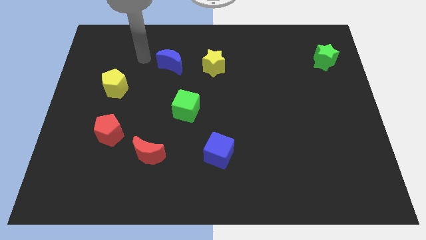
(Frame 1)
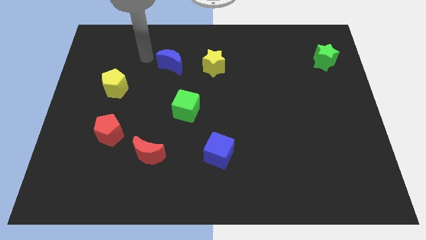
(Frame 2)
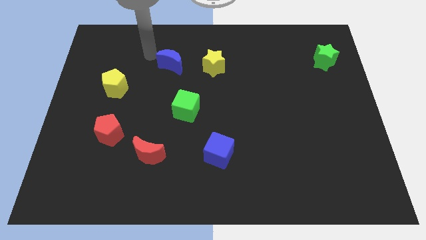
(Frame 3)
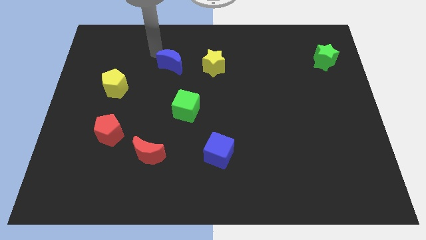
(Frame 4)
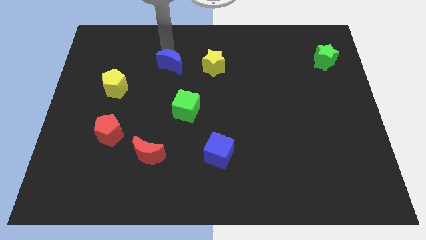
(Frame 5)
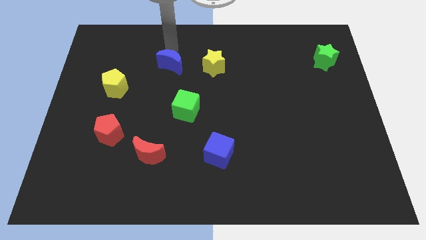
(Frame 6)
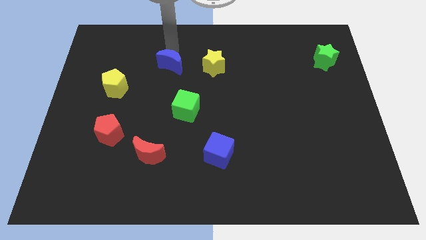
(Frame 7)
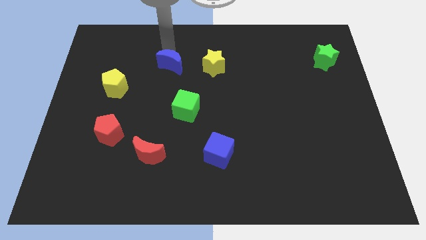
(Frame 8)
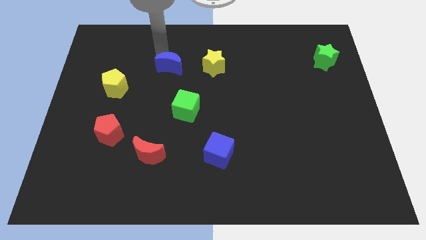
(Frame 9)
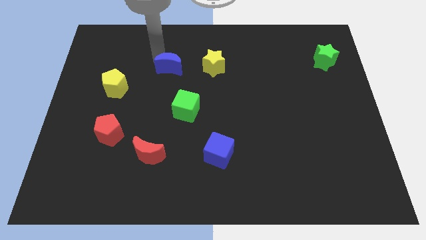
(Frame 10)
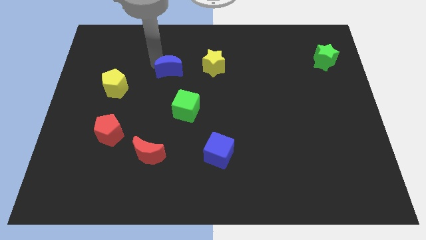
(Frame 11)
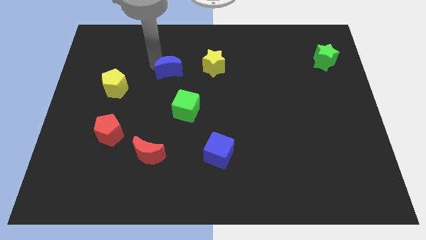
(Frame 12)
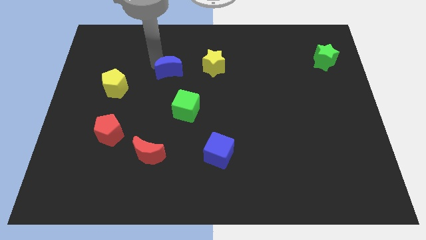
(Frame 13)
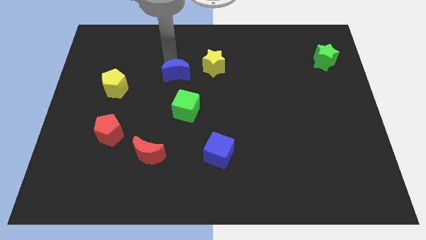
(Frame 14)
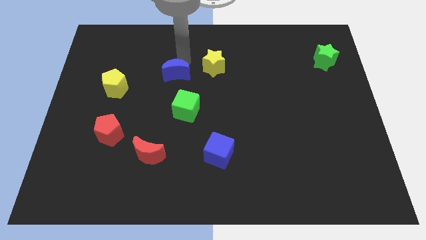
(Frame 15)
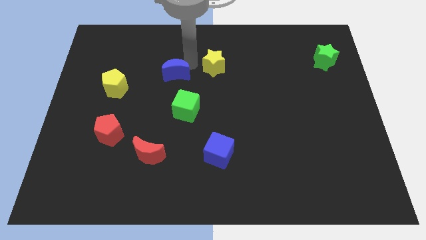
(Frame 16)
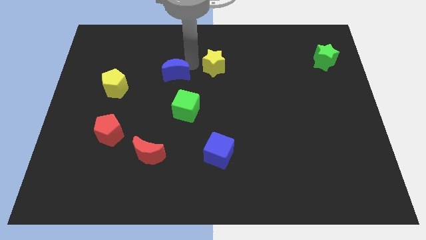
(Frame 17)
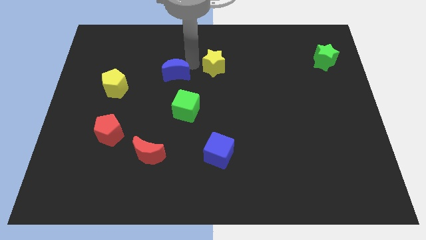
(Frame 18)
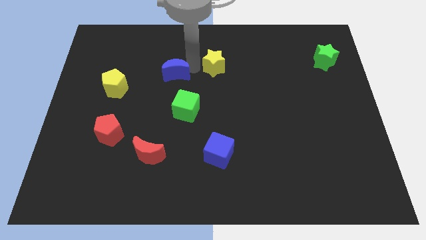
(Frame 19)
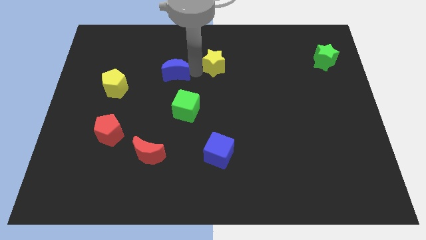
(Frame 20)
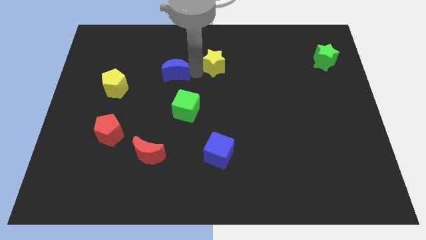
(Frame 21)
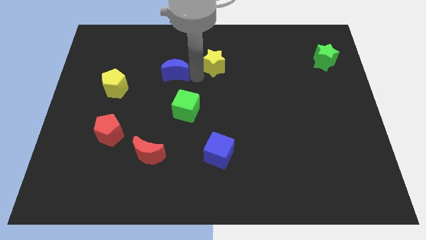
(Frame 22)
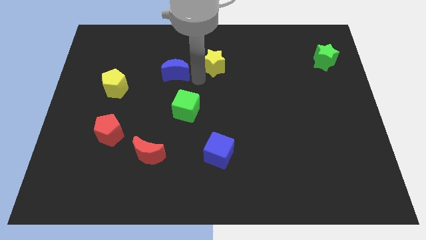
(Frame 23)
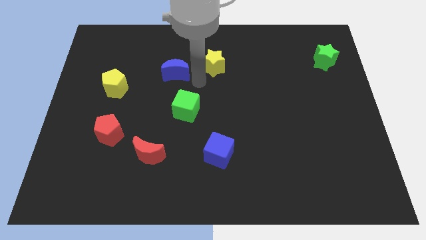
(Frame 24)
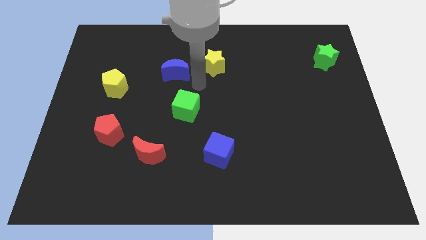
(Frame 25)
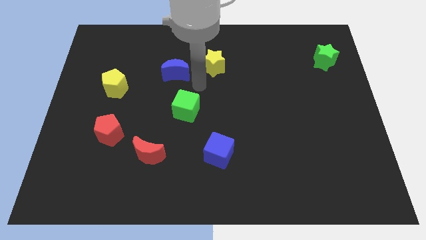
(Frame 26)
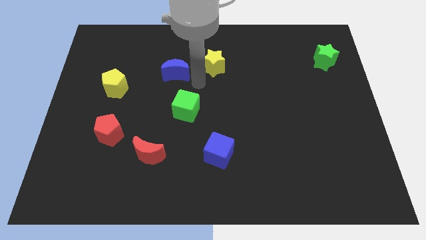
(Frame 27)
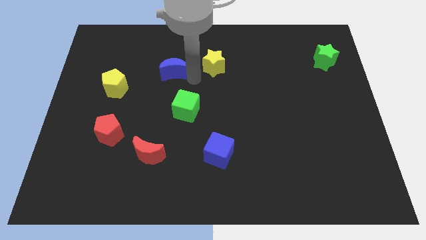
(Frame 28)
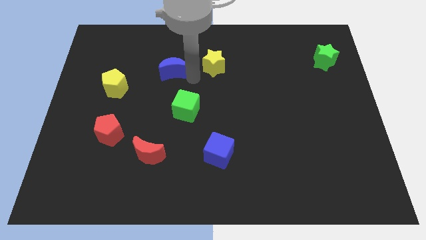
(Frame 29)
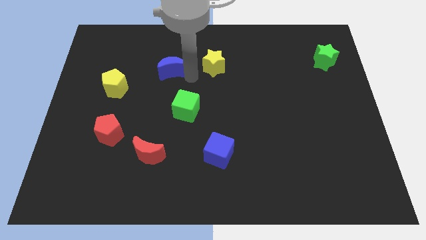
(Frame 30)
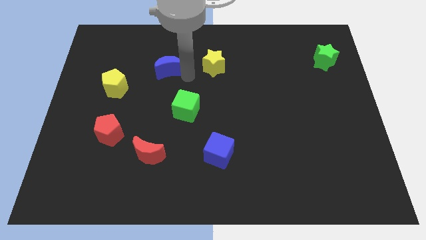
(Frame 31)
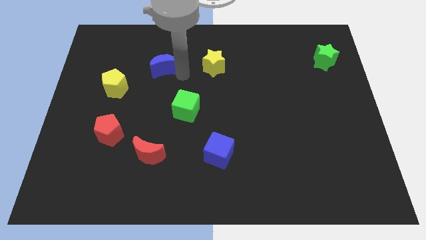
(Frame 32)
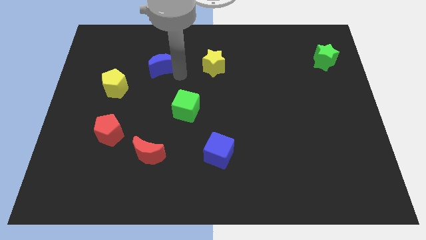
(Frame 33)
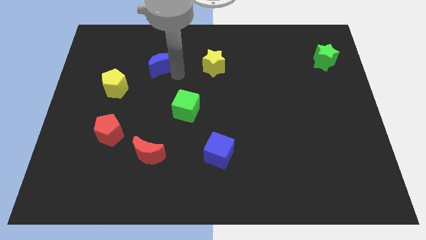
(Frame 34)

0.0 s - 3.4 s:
push the blue crescent slightly to the bottom and slightly to the top

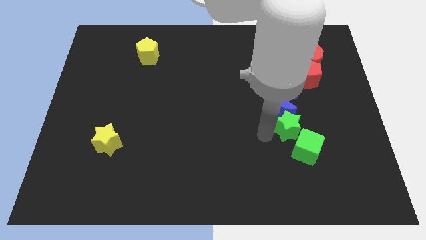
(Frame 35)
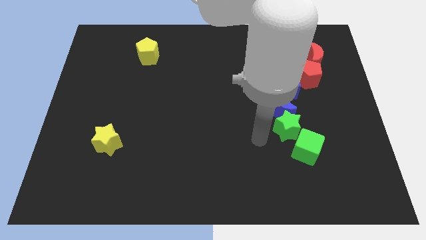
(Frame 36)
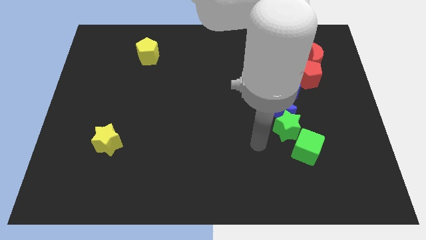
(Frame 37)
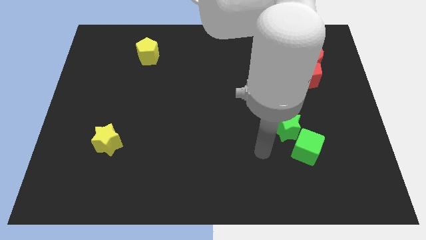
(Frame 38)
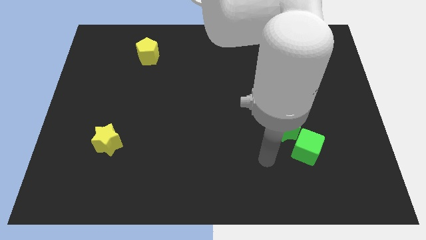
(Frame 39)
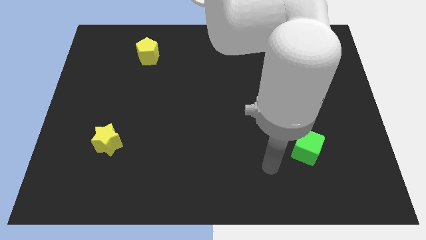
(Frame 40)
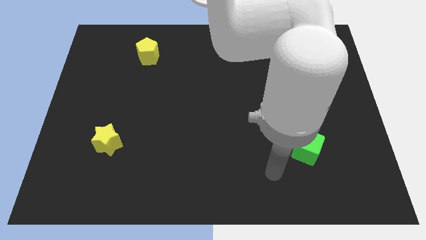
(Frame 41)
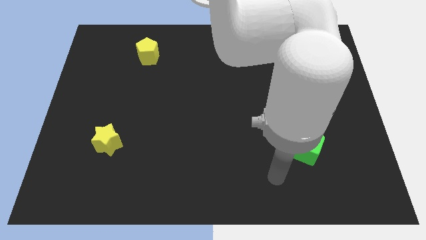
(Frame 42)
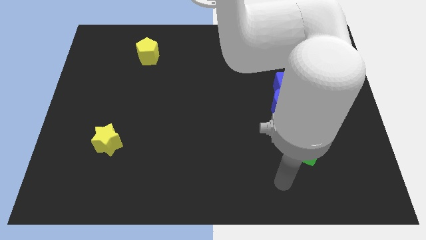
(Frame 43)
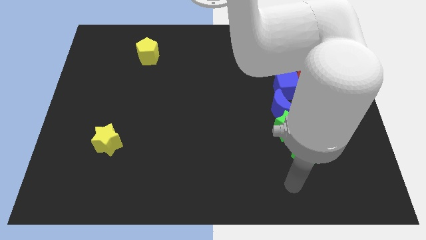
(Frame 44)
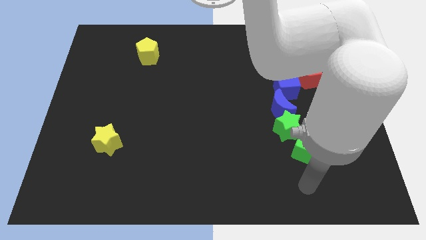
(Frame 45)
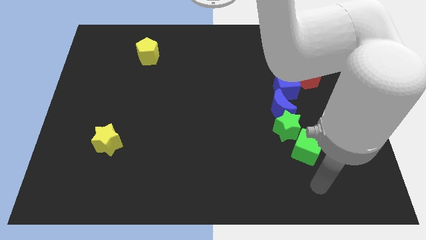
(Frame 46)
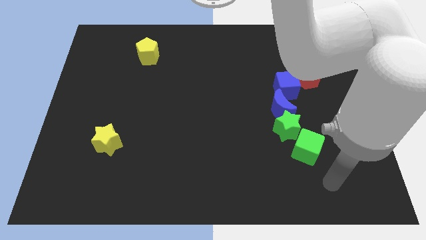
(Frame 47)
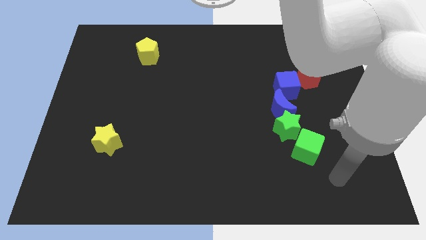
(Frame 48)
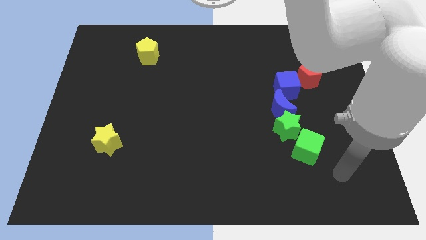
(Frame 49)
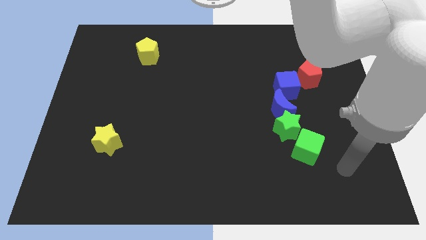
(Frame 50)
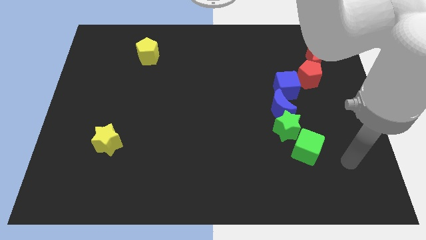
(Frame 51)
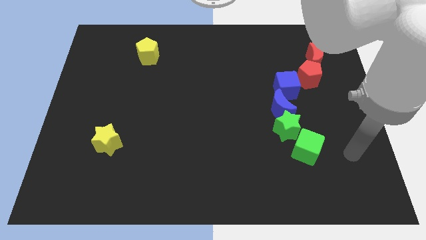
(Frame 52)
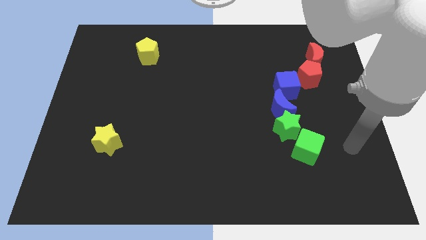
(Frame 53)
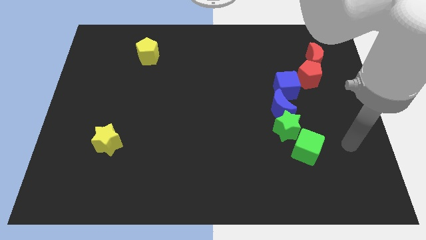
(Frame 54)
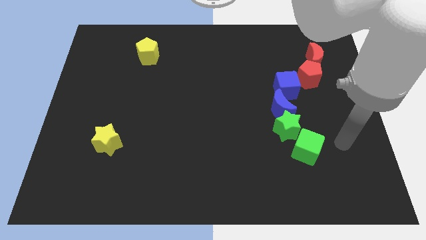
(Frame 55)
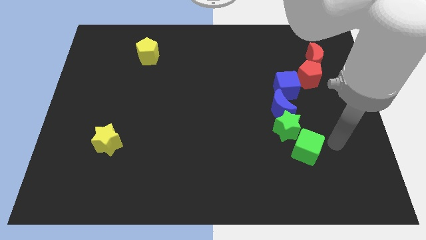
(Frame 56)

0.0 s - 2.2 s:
move your arm towards the green cube

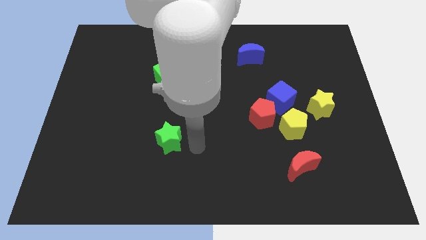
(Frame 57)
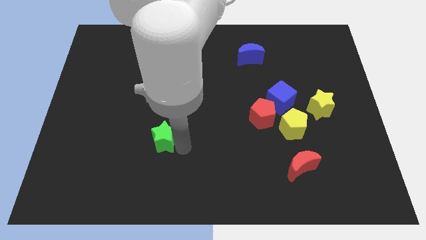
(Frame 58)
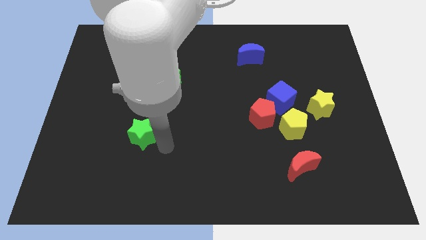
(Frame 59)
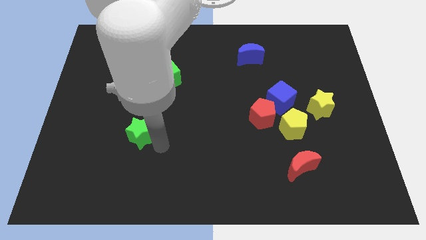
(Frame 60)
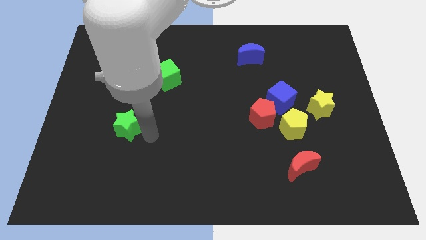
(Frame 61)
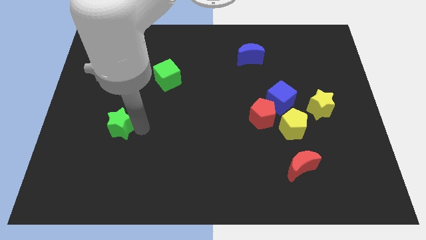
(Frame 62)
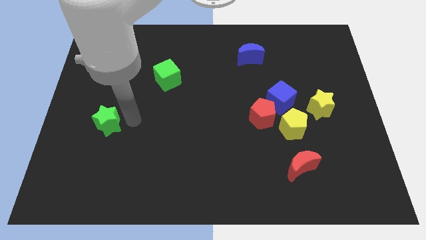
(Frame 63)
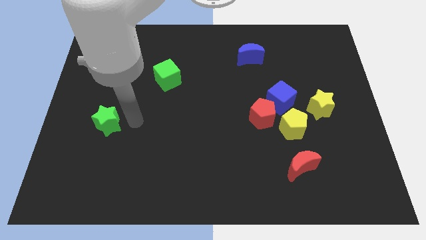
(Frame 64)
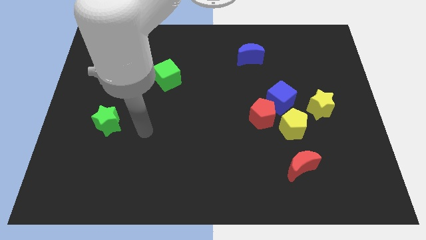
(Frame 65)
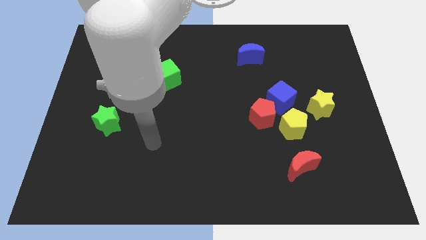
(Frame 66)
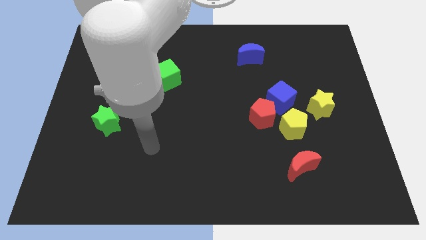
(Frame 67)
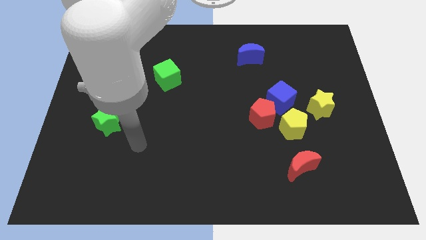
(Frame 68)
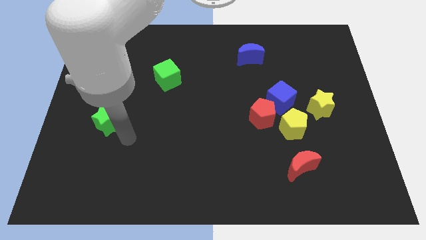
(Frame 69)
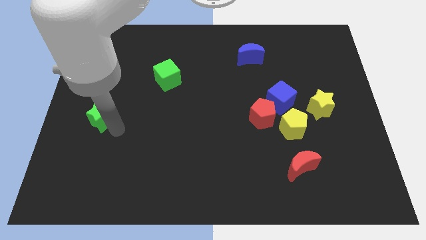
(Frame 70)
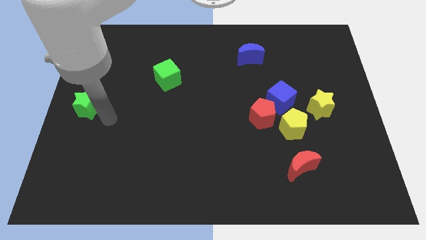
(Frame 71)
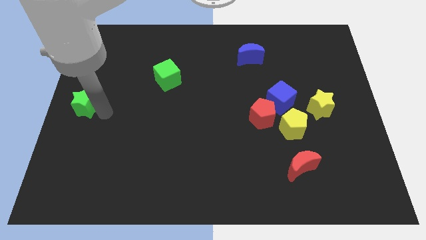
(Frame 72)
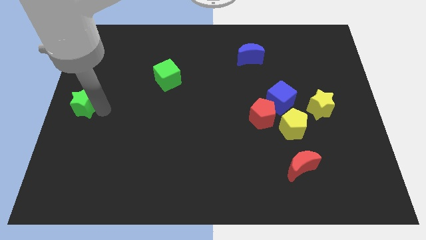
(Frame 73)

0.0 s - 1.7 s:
slide the green star towards the center left side of the board

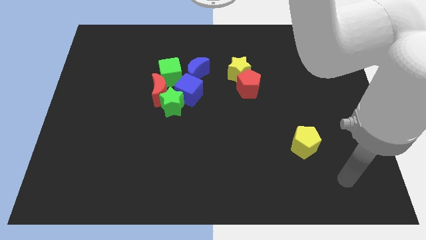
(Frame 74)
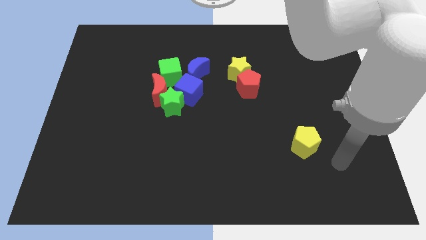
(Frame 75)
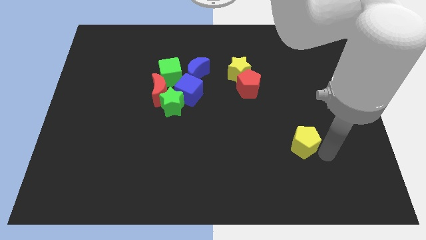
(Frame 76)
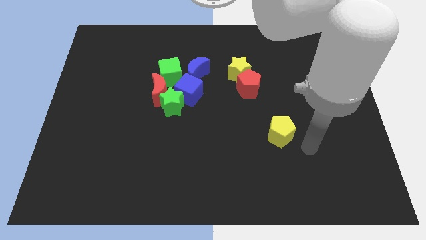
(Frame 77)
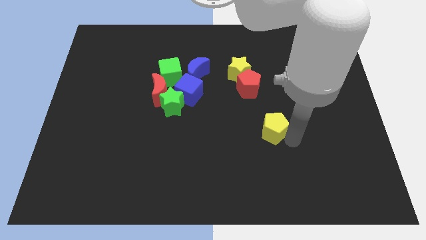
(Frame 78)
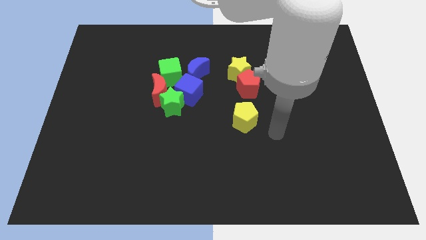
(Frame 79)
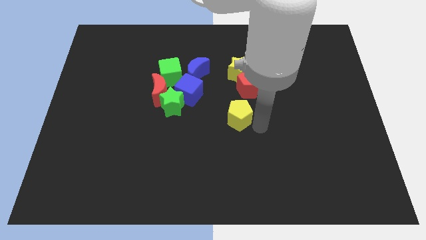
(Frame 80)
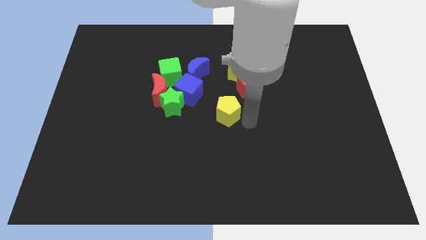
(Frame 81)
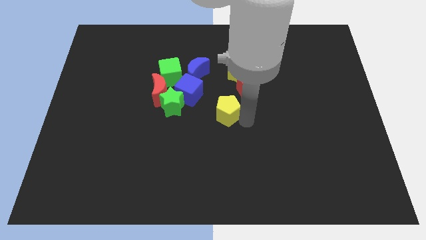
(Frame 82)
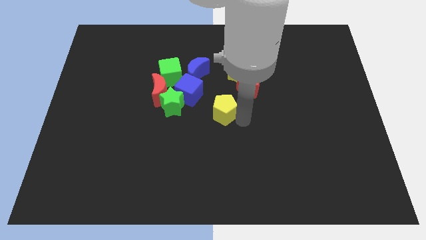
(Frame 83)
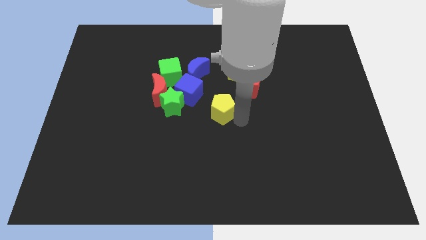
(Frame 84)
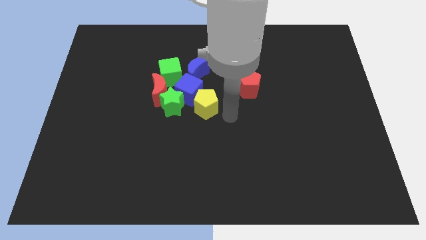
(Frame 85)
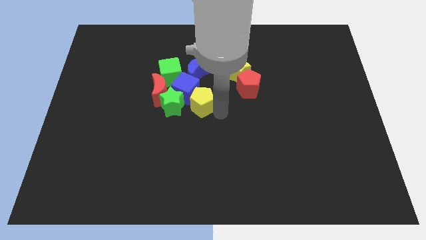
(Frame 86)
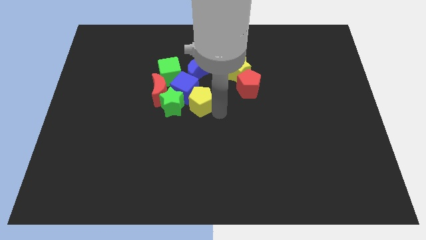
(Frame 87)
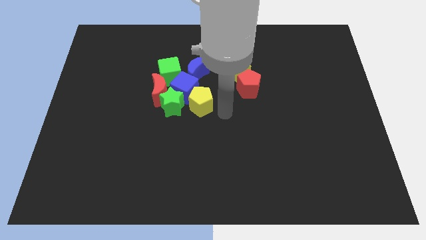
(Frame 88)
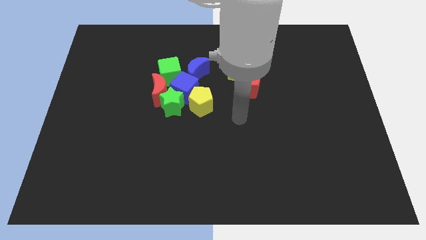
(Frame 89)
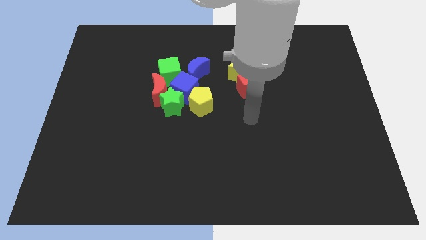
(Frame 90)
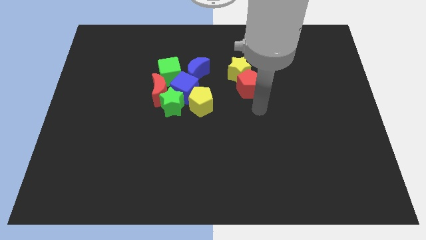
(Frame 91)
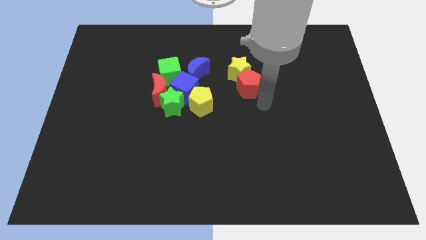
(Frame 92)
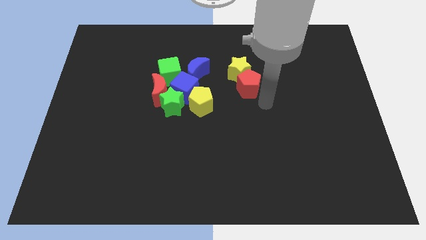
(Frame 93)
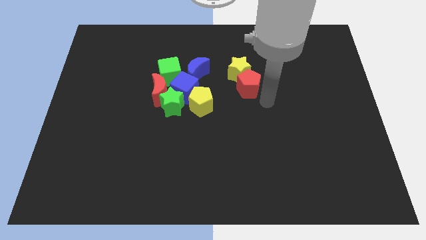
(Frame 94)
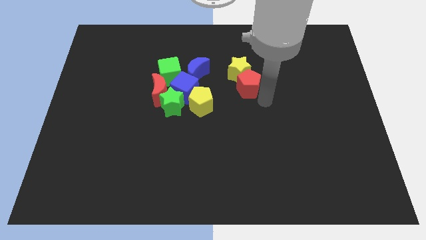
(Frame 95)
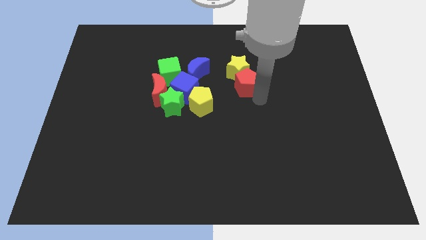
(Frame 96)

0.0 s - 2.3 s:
place the yellow pentagon middle of the board beside the green star
